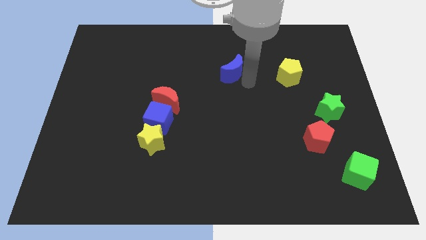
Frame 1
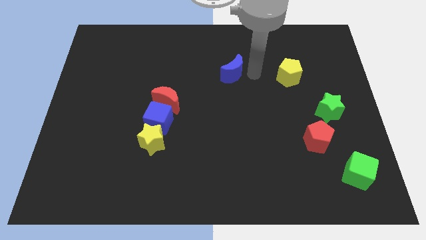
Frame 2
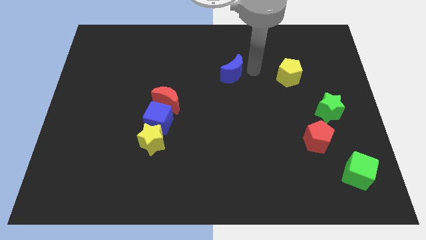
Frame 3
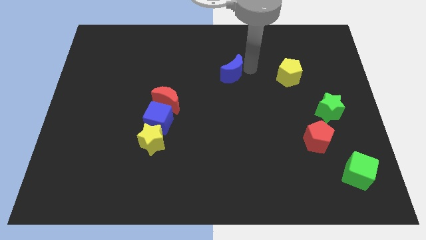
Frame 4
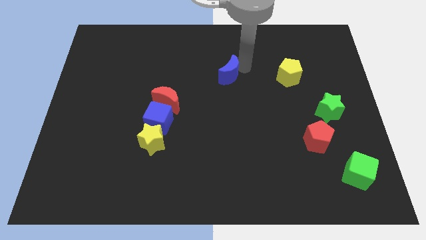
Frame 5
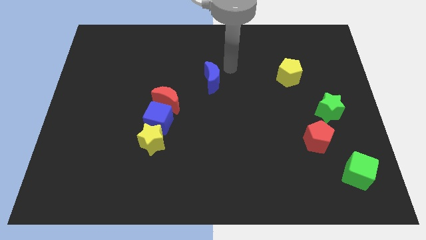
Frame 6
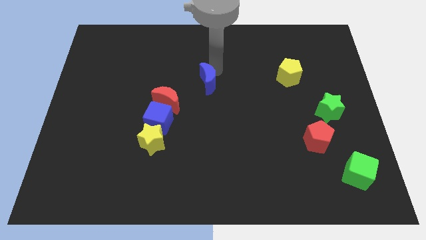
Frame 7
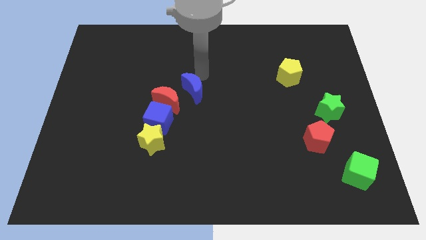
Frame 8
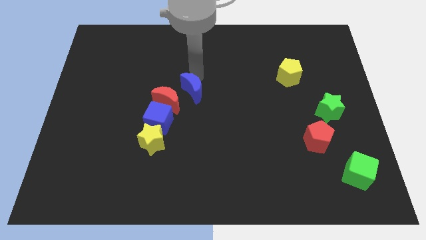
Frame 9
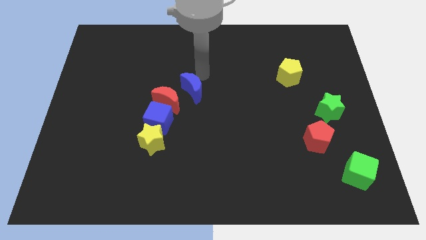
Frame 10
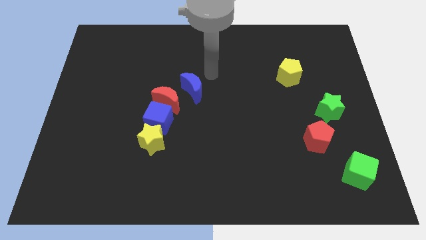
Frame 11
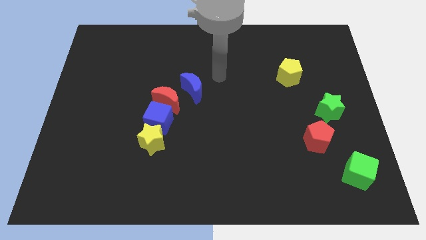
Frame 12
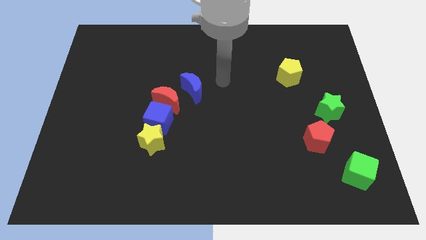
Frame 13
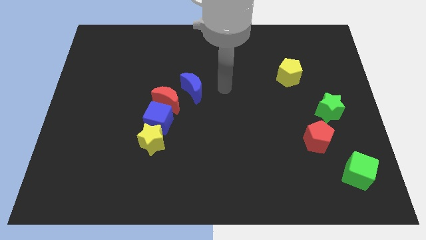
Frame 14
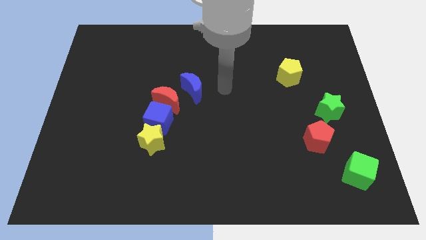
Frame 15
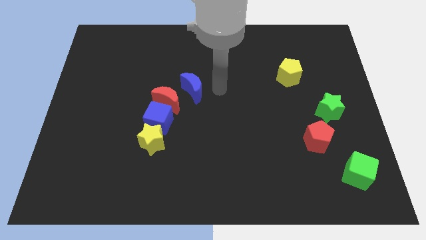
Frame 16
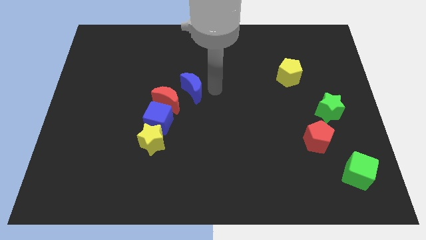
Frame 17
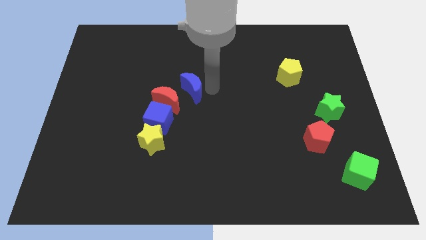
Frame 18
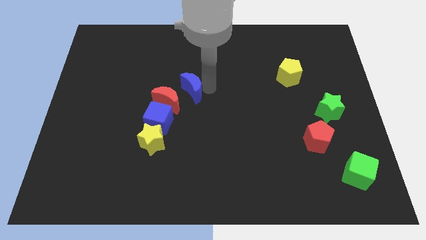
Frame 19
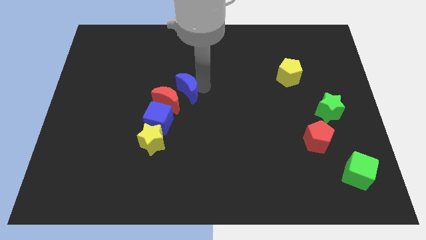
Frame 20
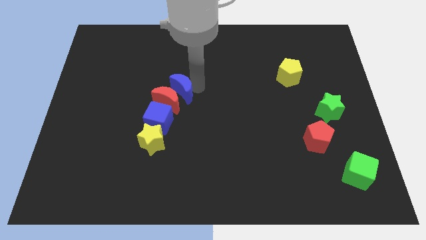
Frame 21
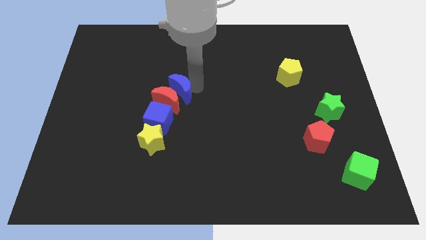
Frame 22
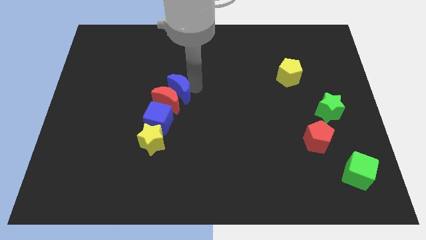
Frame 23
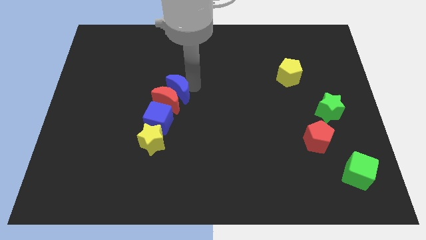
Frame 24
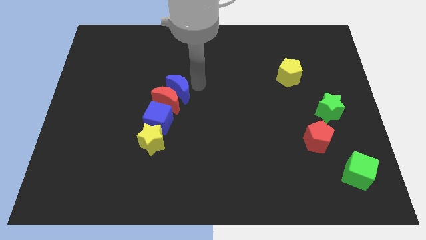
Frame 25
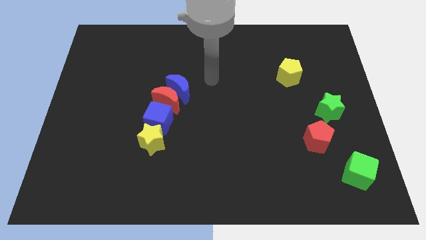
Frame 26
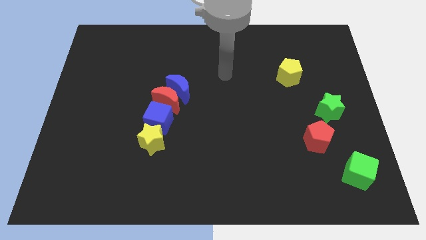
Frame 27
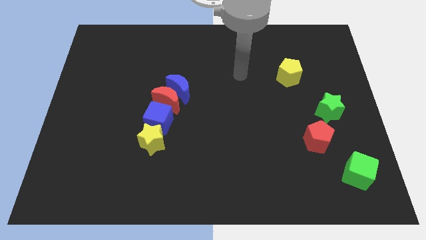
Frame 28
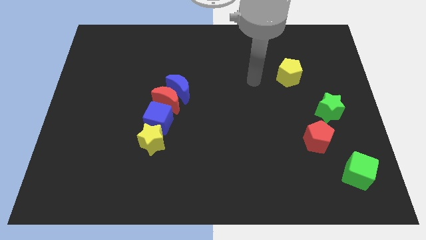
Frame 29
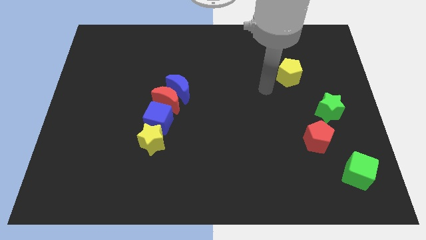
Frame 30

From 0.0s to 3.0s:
push the blue crescent on top of the red crescent

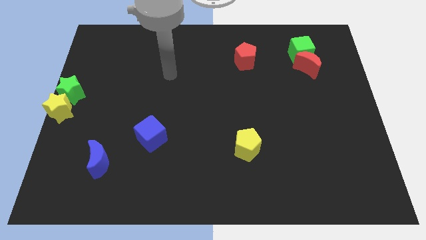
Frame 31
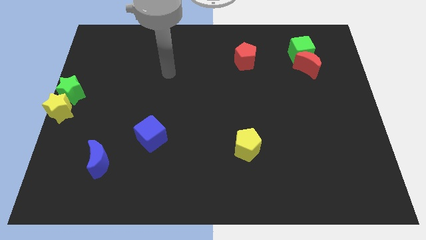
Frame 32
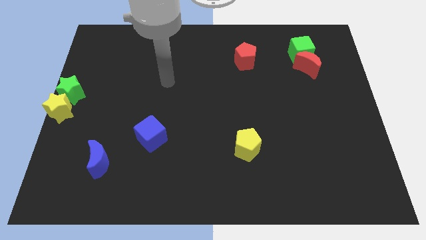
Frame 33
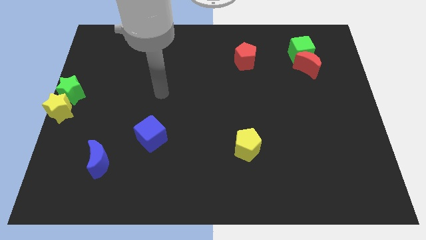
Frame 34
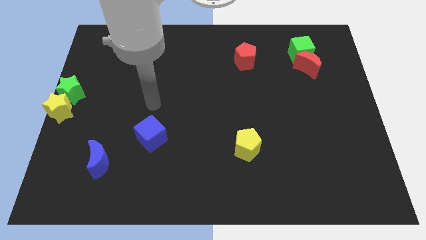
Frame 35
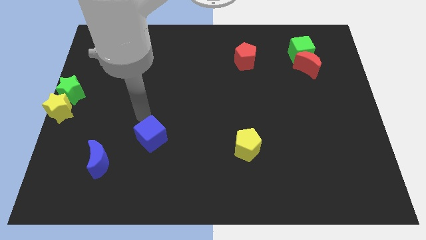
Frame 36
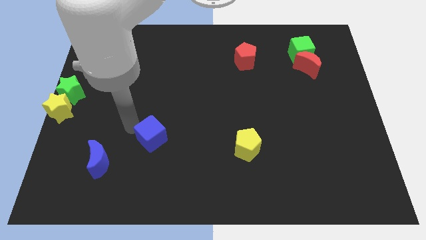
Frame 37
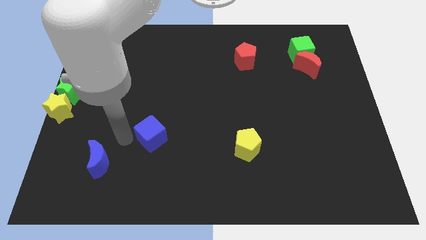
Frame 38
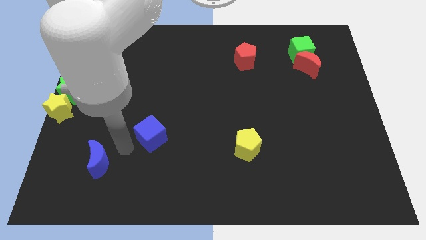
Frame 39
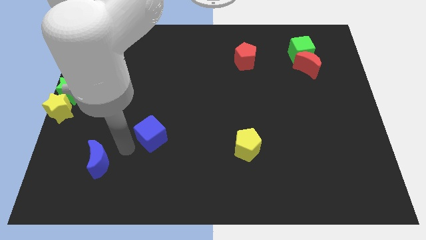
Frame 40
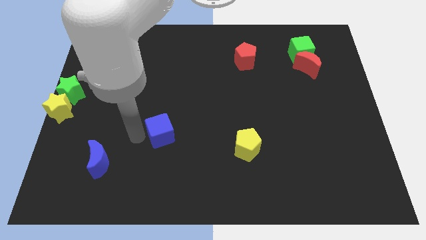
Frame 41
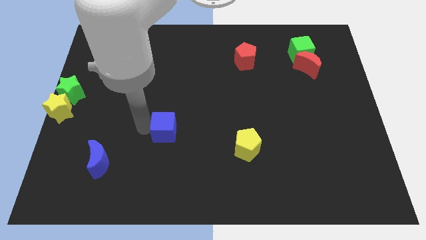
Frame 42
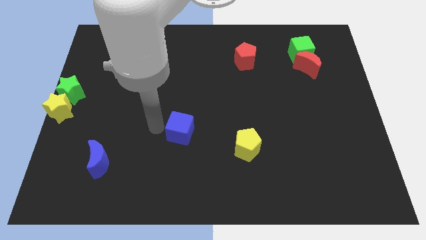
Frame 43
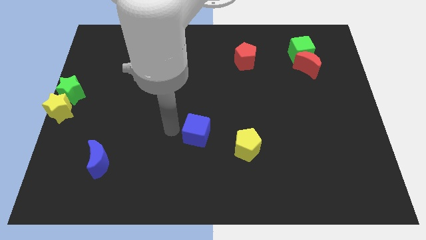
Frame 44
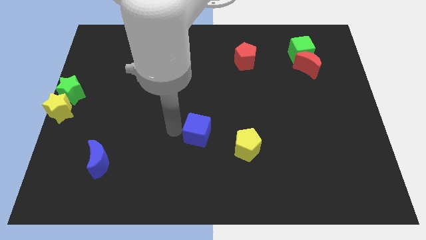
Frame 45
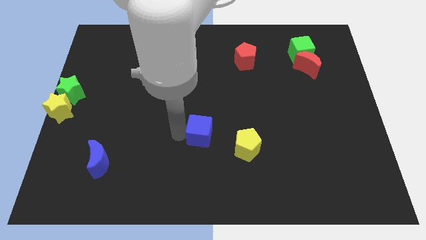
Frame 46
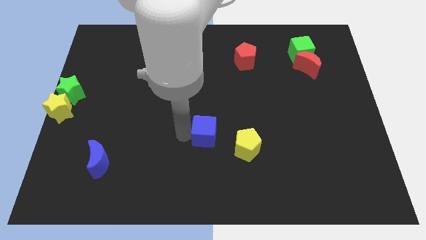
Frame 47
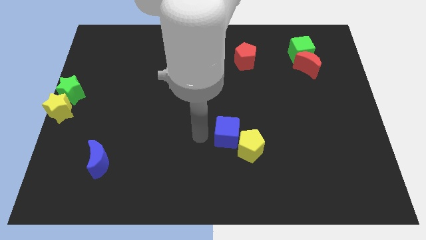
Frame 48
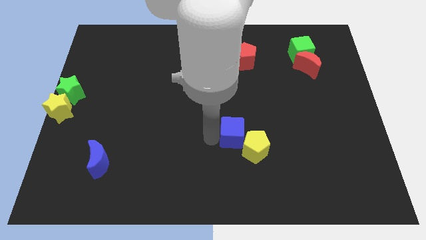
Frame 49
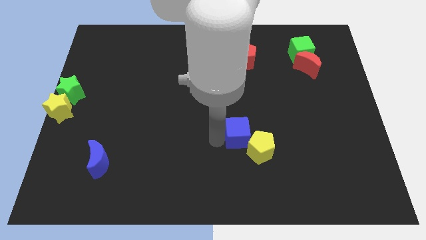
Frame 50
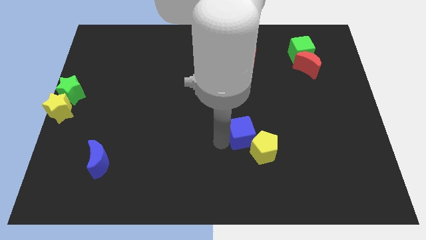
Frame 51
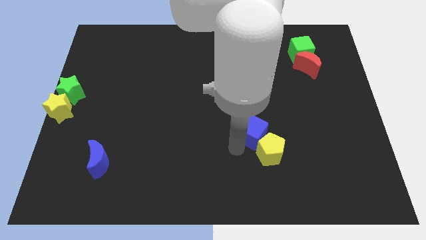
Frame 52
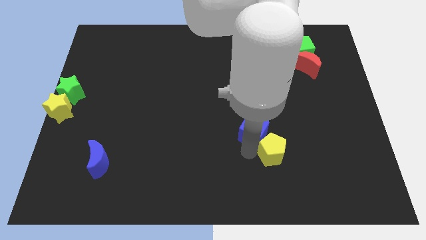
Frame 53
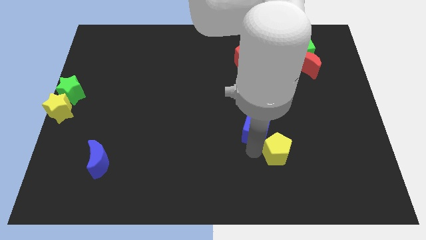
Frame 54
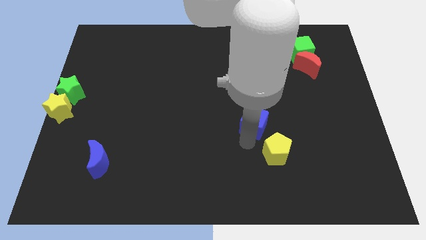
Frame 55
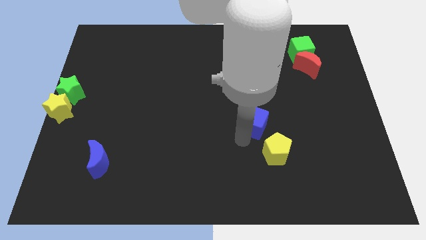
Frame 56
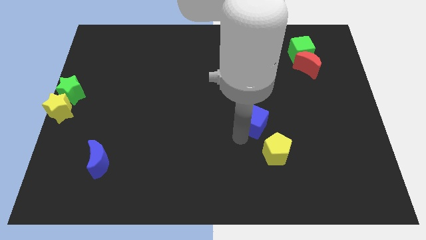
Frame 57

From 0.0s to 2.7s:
push the blue cube into yellow pentagon

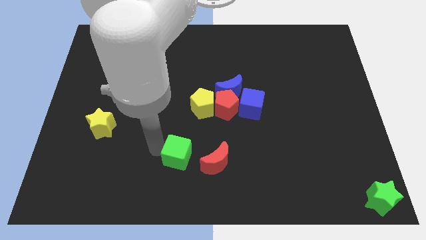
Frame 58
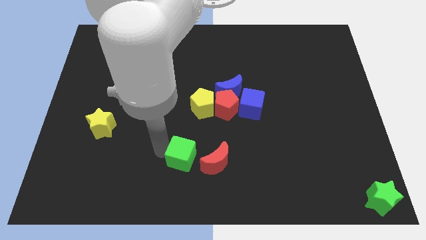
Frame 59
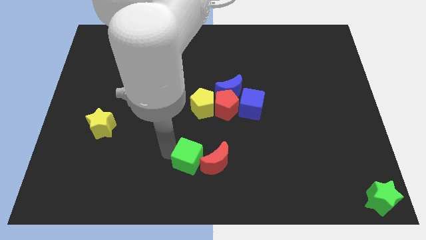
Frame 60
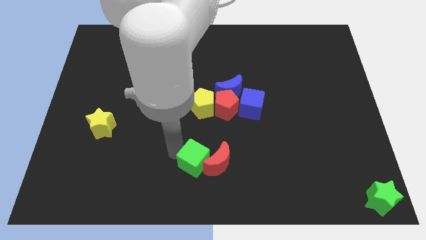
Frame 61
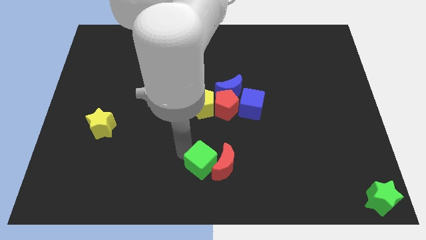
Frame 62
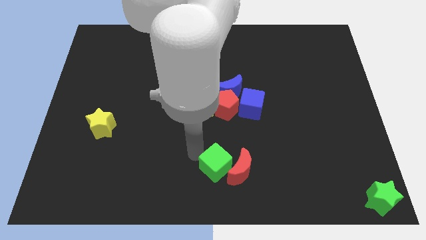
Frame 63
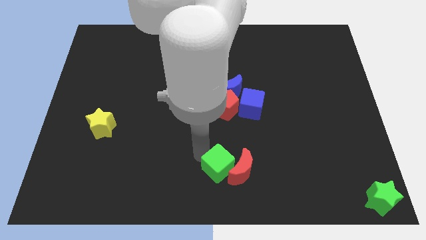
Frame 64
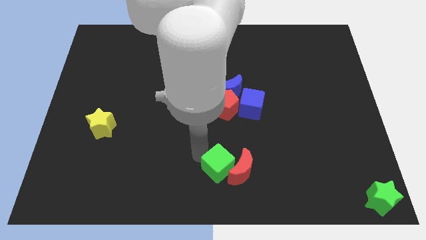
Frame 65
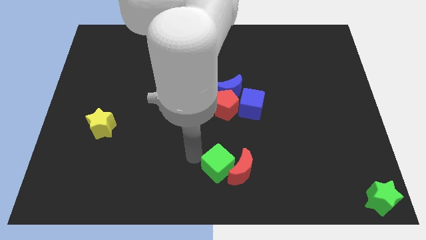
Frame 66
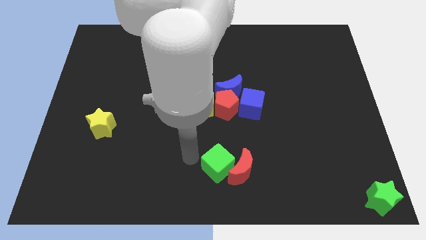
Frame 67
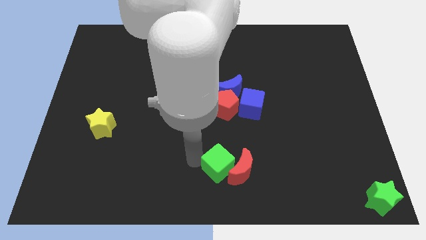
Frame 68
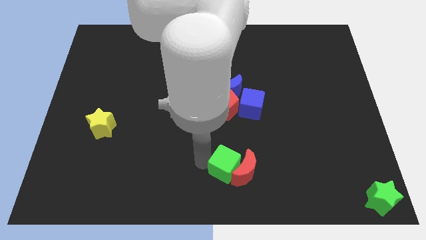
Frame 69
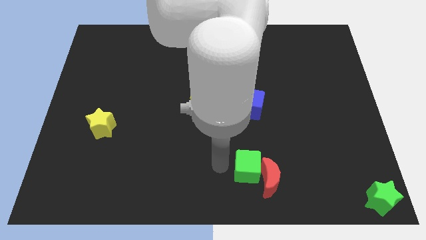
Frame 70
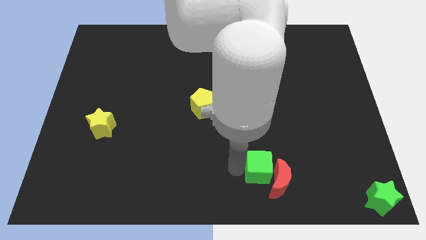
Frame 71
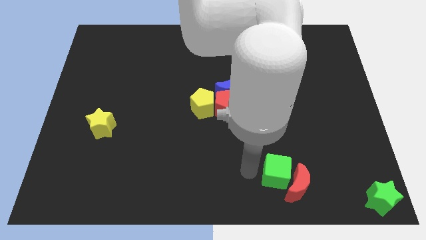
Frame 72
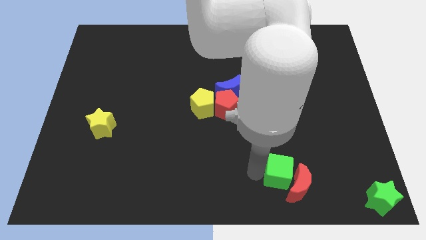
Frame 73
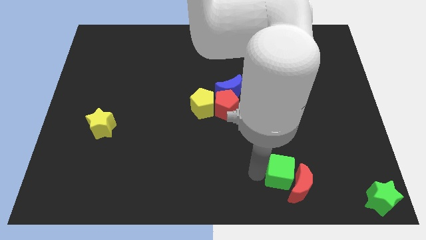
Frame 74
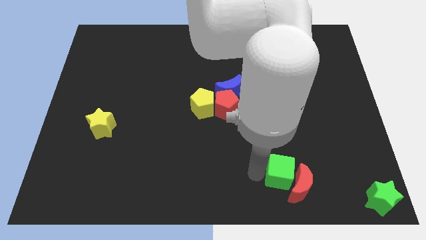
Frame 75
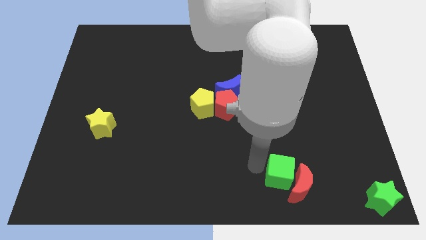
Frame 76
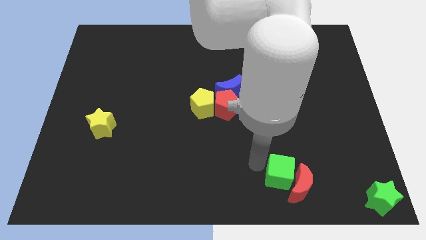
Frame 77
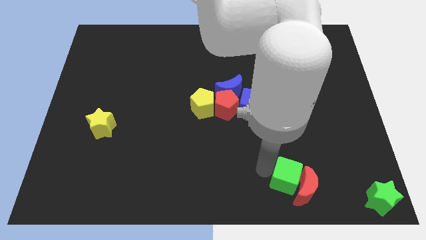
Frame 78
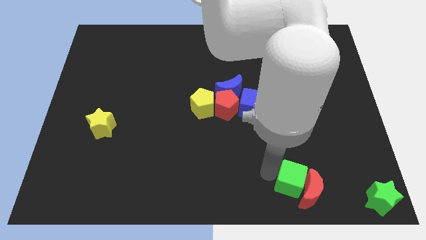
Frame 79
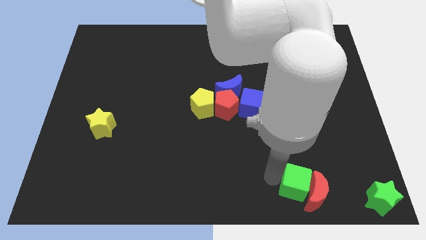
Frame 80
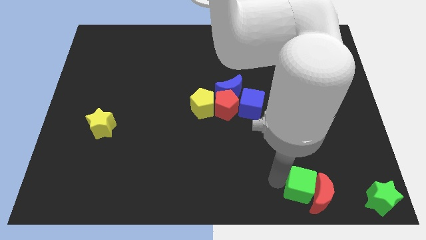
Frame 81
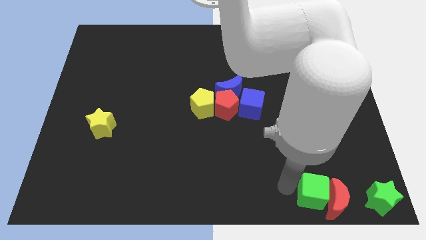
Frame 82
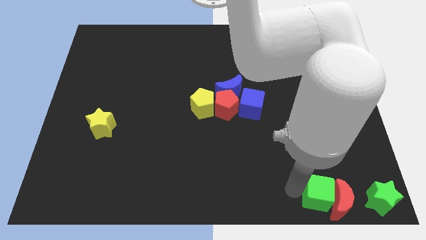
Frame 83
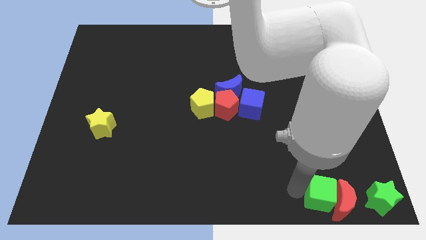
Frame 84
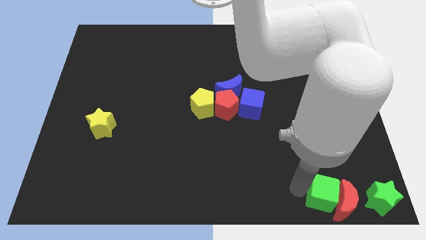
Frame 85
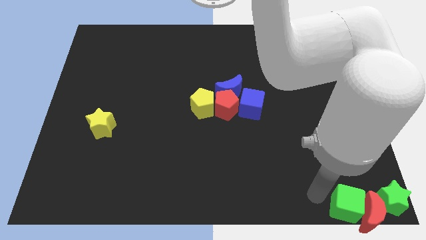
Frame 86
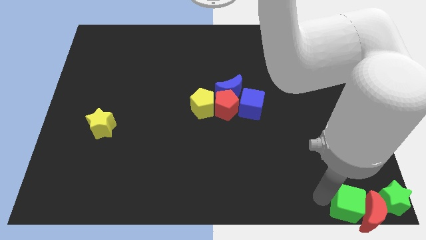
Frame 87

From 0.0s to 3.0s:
push the green cube into the red crescent

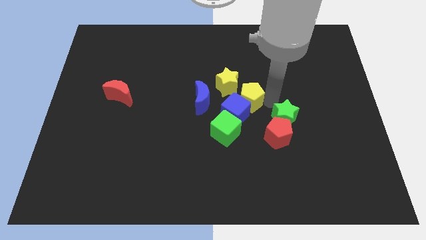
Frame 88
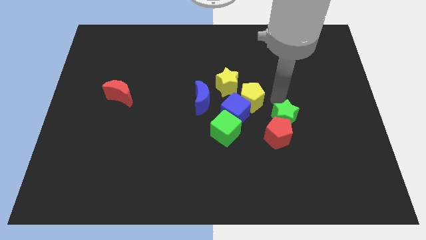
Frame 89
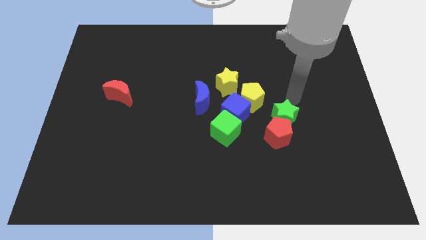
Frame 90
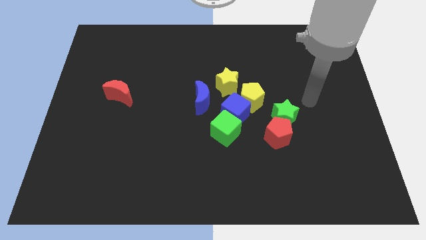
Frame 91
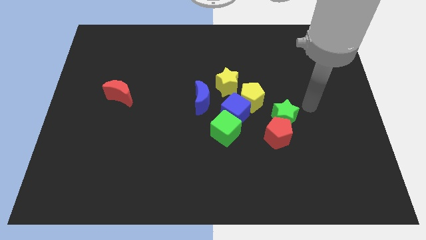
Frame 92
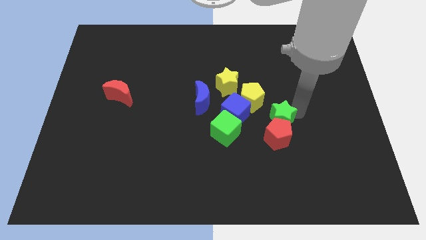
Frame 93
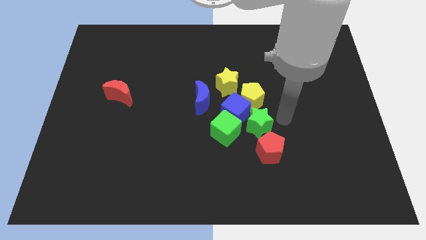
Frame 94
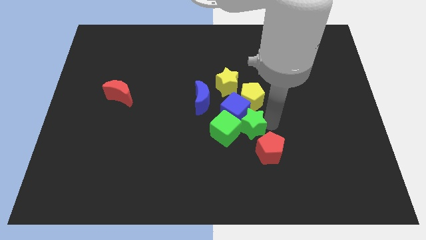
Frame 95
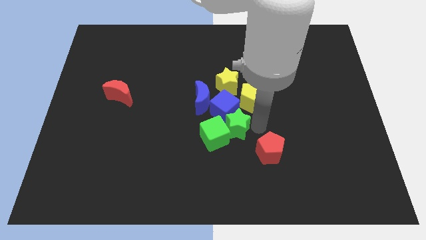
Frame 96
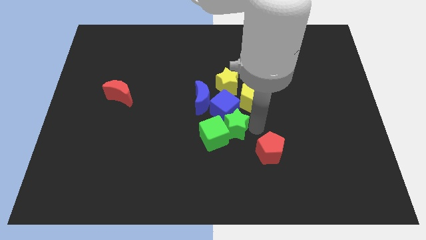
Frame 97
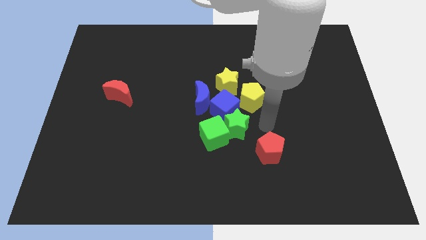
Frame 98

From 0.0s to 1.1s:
push green star into green cube
